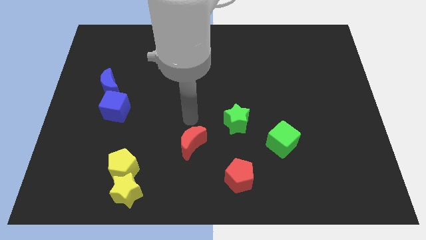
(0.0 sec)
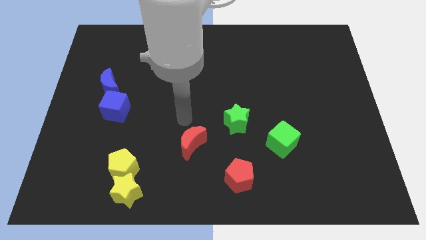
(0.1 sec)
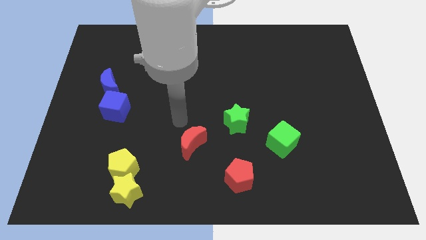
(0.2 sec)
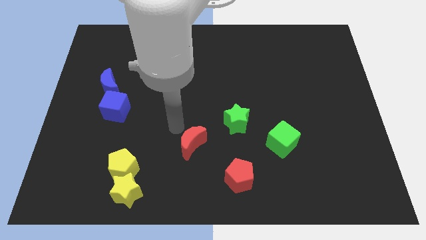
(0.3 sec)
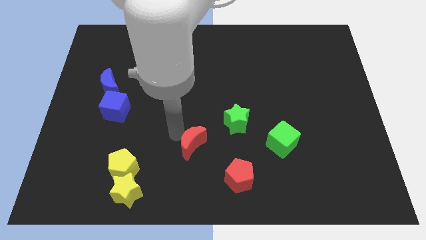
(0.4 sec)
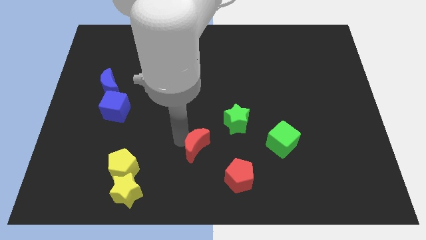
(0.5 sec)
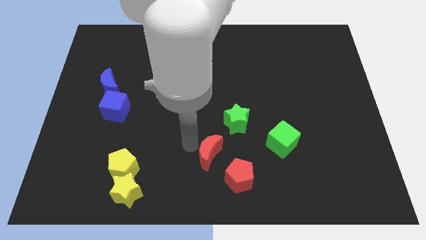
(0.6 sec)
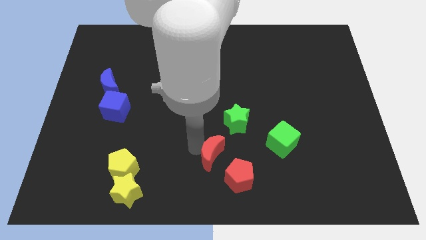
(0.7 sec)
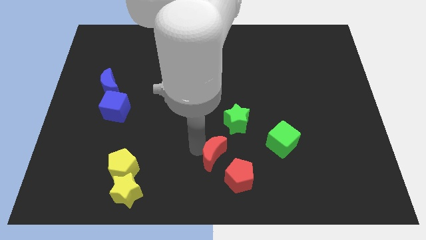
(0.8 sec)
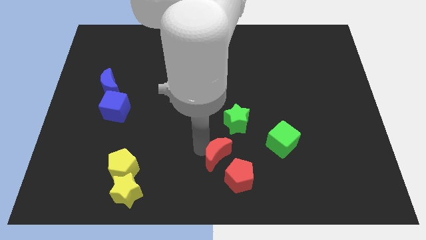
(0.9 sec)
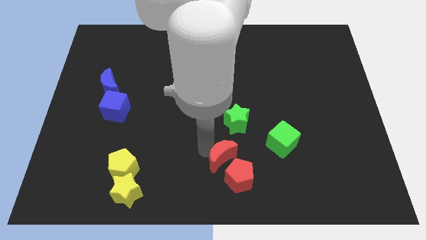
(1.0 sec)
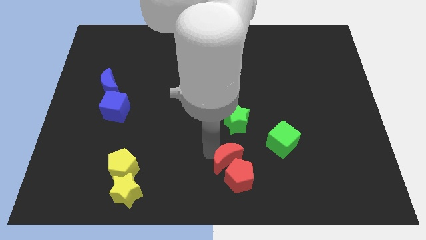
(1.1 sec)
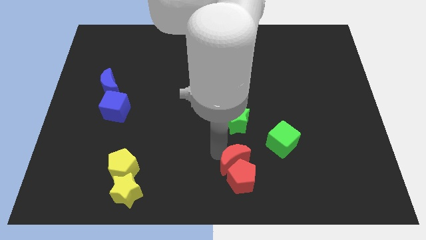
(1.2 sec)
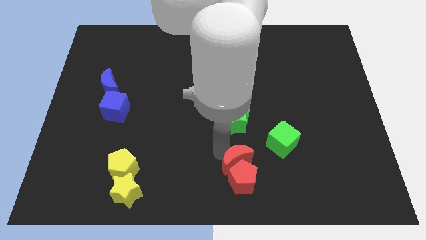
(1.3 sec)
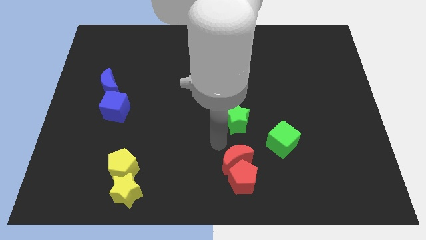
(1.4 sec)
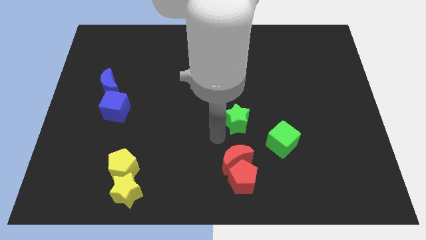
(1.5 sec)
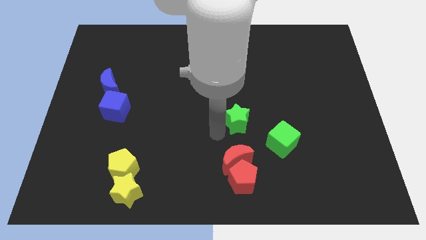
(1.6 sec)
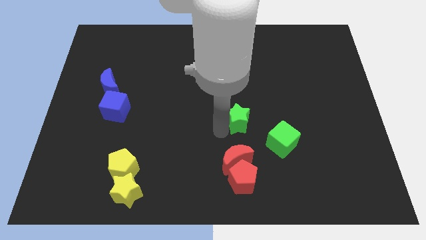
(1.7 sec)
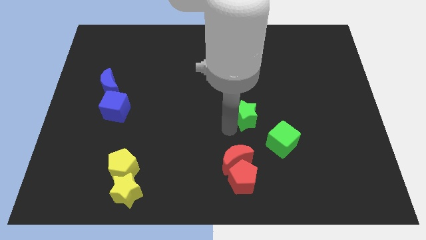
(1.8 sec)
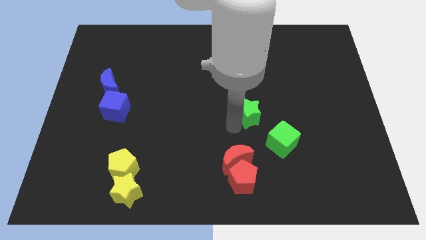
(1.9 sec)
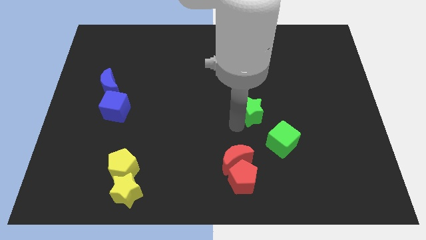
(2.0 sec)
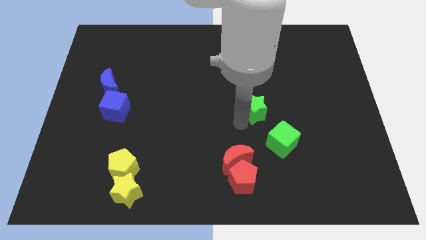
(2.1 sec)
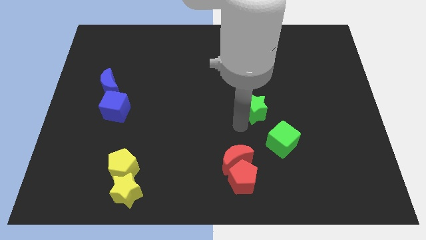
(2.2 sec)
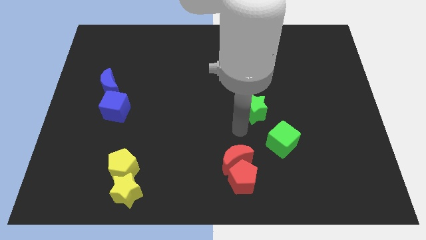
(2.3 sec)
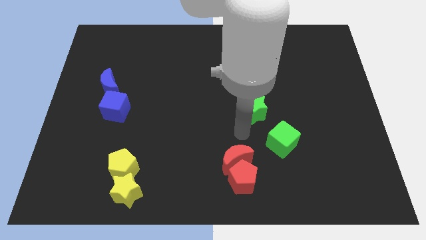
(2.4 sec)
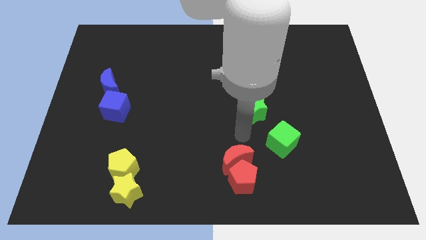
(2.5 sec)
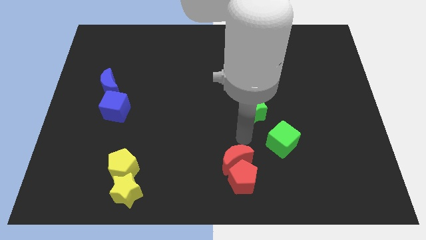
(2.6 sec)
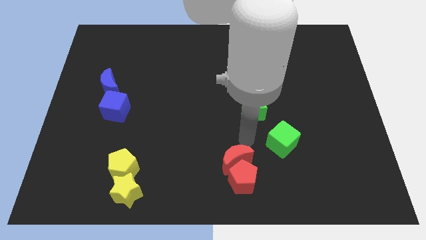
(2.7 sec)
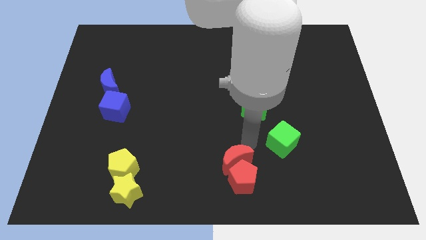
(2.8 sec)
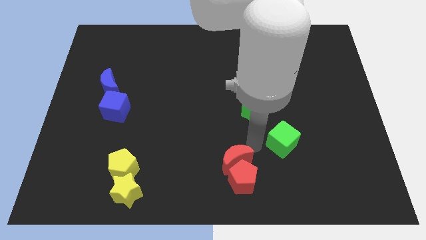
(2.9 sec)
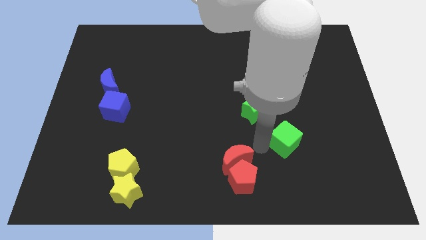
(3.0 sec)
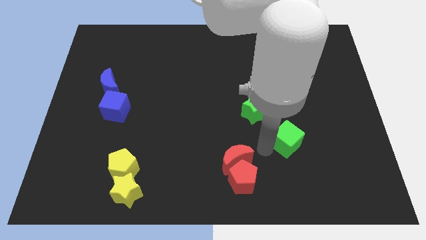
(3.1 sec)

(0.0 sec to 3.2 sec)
place the red moon towards red pentagon

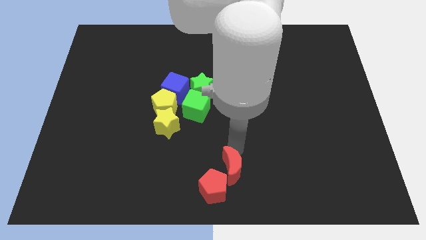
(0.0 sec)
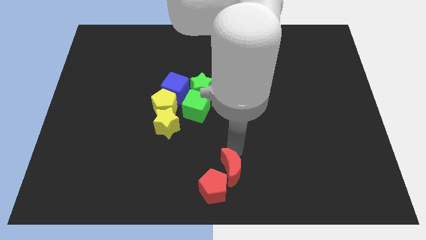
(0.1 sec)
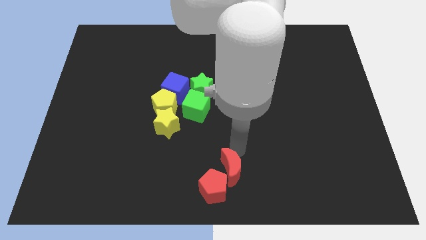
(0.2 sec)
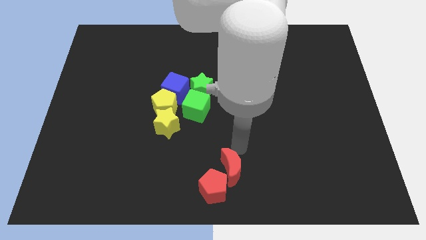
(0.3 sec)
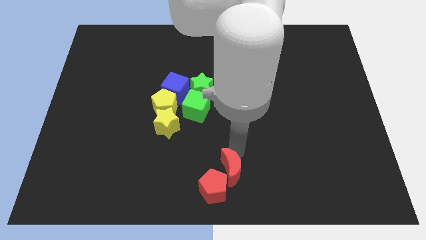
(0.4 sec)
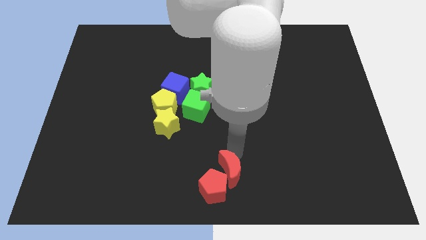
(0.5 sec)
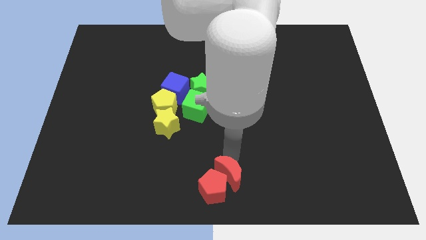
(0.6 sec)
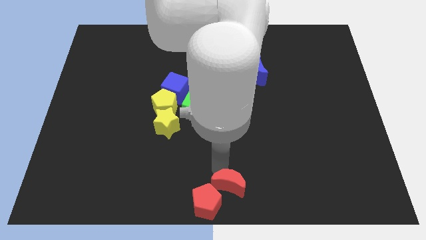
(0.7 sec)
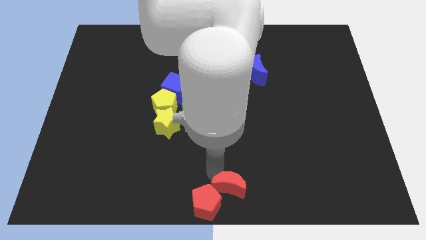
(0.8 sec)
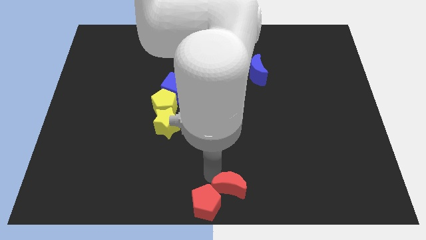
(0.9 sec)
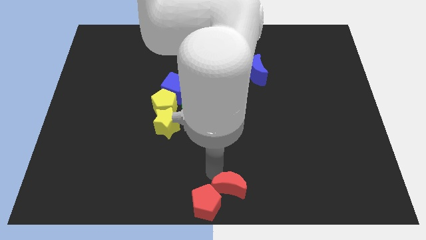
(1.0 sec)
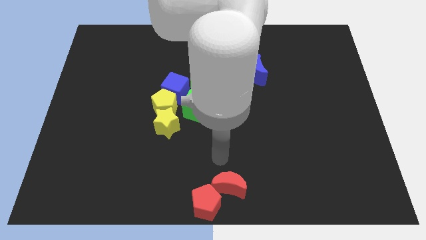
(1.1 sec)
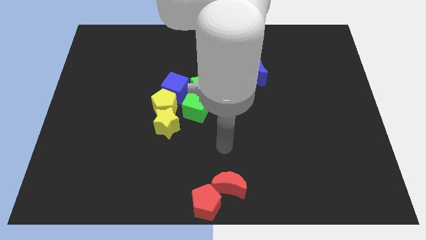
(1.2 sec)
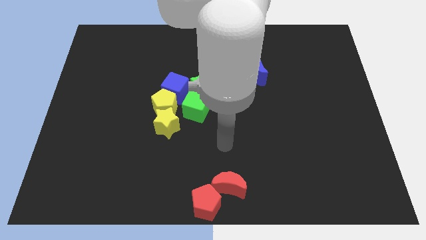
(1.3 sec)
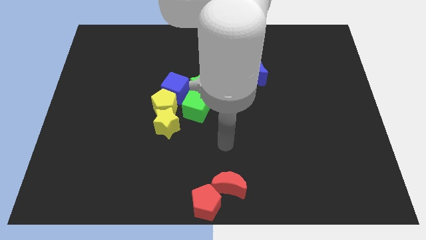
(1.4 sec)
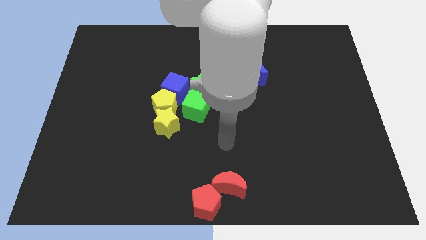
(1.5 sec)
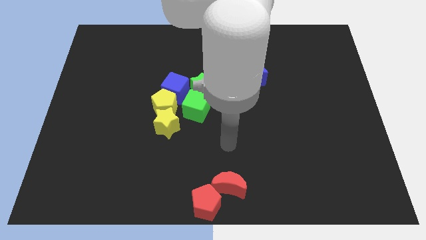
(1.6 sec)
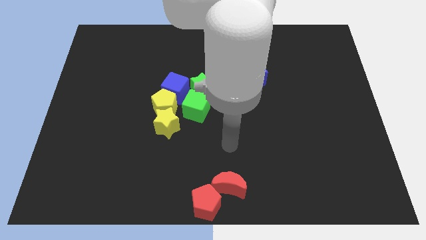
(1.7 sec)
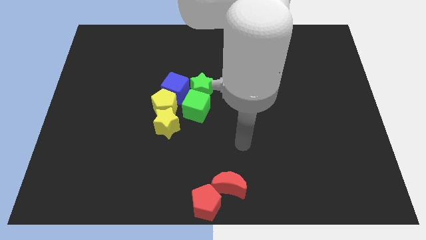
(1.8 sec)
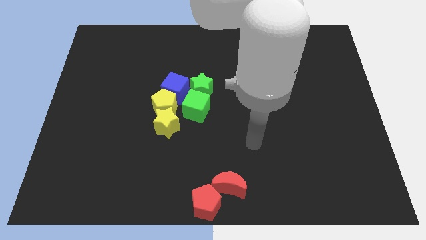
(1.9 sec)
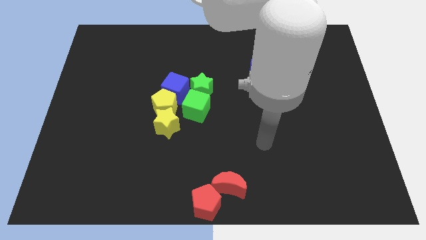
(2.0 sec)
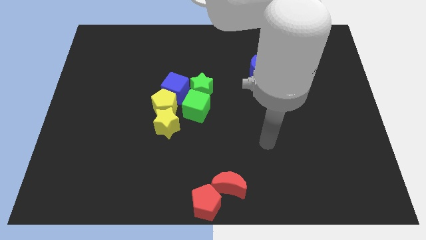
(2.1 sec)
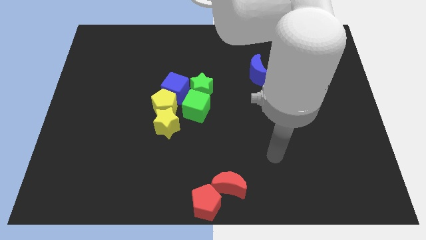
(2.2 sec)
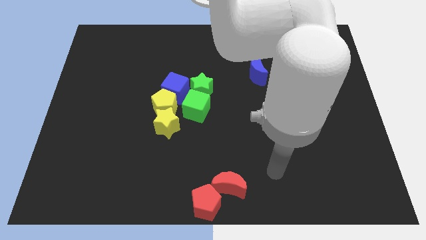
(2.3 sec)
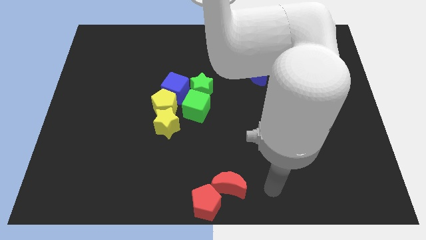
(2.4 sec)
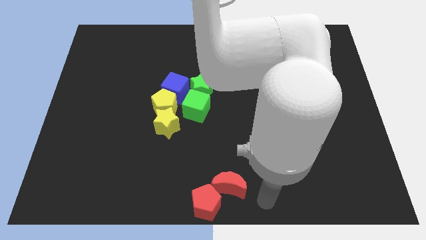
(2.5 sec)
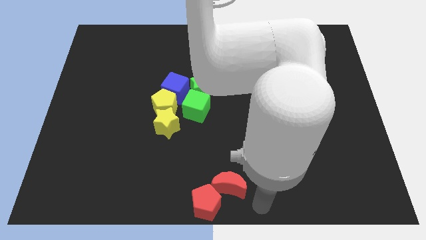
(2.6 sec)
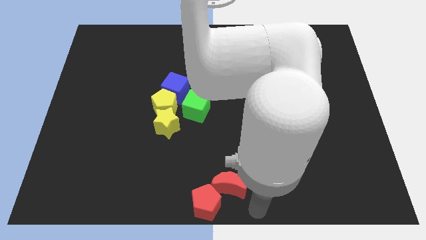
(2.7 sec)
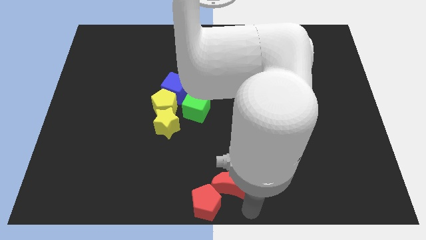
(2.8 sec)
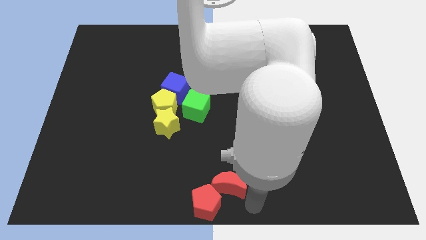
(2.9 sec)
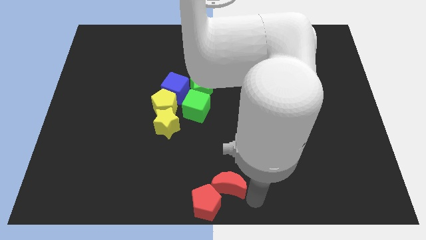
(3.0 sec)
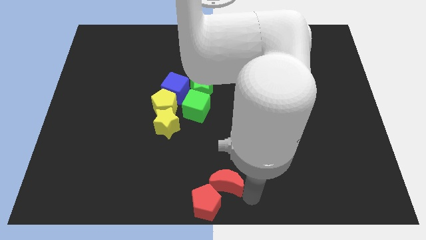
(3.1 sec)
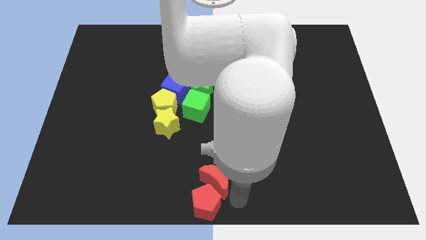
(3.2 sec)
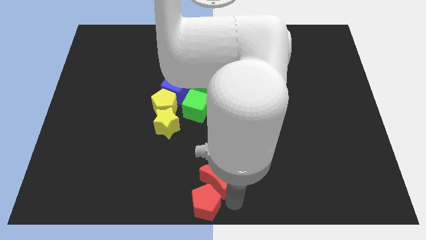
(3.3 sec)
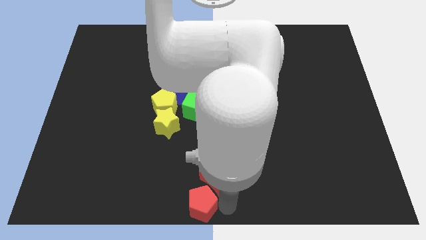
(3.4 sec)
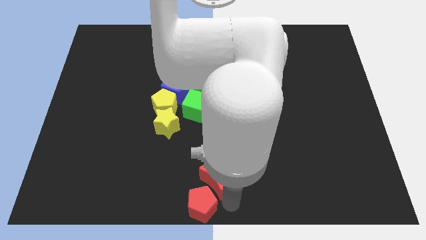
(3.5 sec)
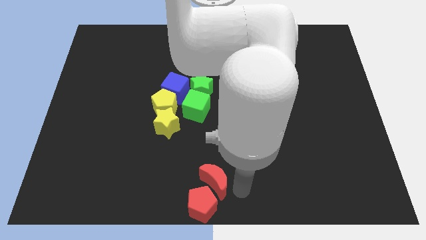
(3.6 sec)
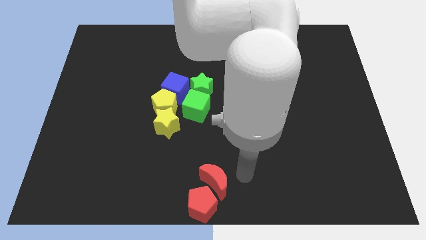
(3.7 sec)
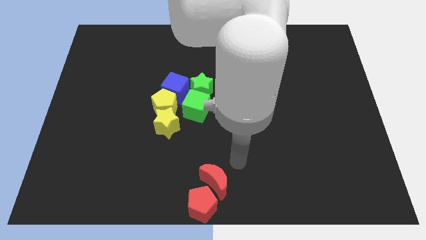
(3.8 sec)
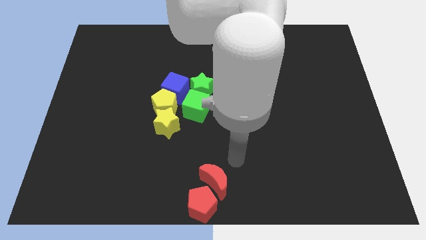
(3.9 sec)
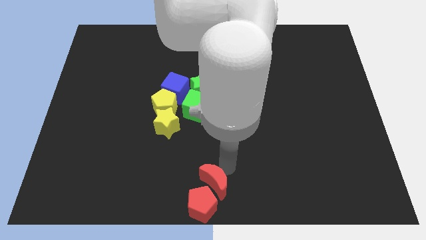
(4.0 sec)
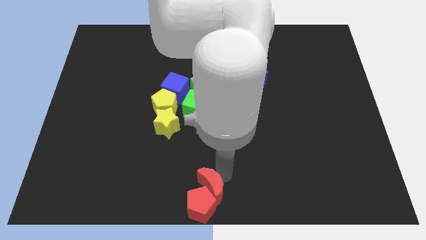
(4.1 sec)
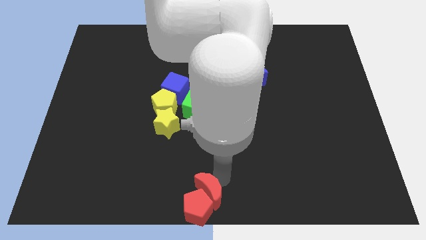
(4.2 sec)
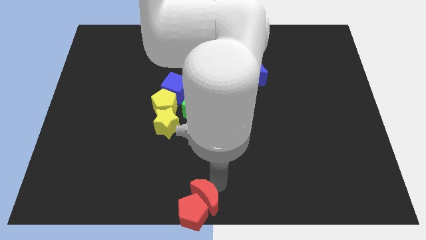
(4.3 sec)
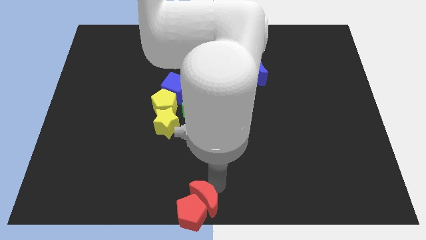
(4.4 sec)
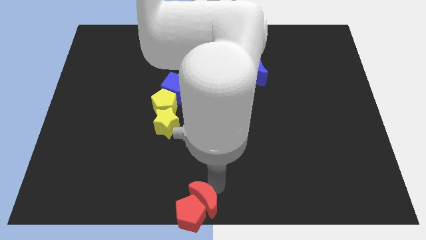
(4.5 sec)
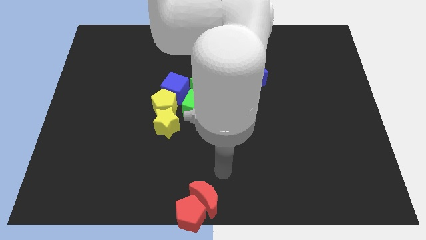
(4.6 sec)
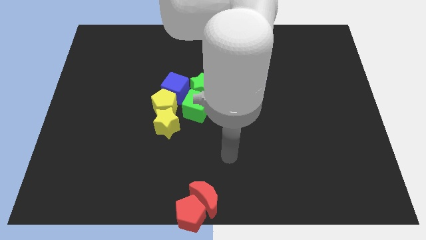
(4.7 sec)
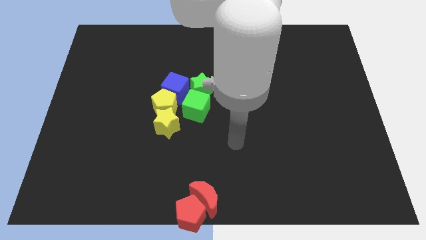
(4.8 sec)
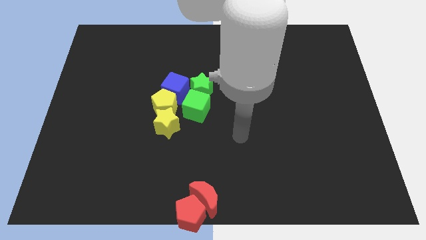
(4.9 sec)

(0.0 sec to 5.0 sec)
push the red moon to the bottom center of the board

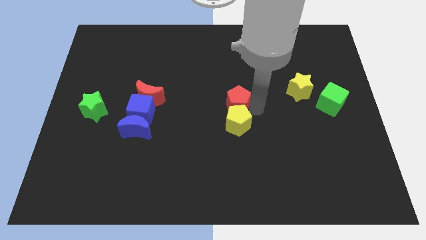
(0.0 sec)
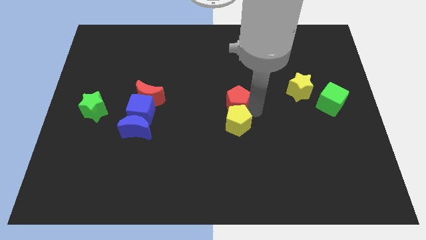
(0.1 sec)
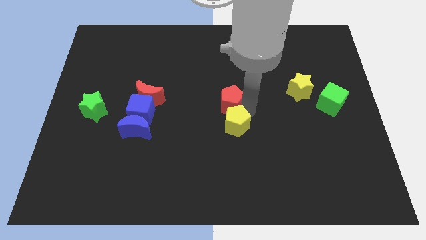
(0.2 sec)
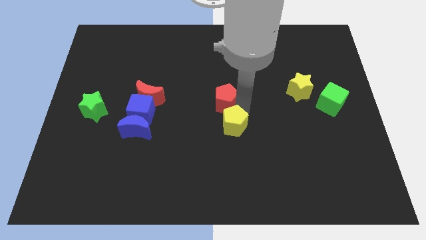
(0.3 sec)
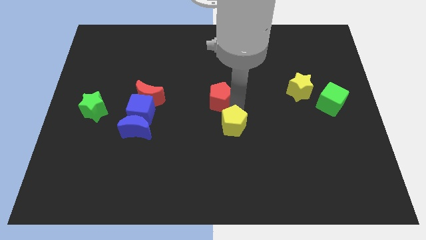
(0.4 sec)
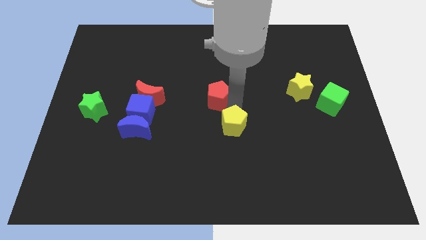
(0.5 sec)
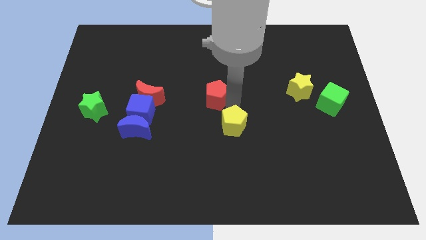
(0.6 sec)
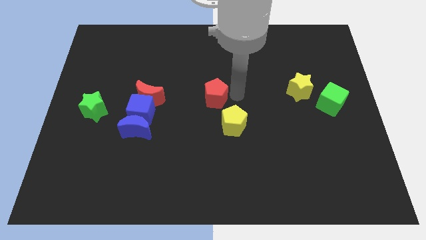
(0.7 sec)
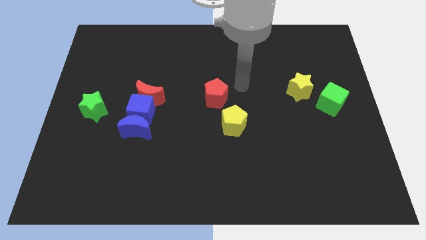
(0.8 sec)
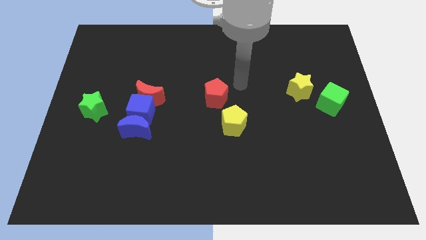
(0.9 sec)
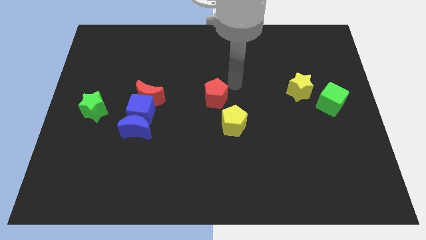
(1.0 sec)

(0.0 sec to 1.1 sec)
separate the red pentagon and yellow pentagon
